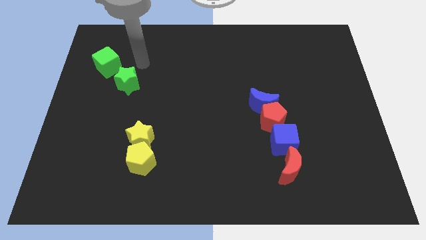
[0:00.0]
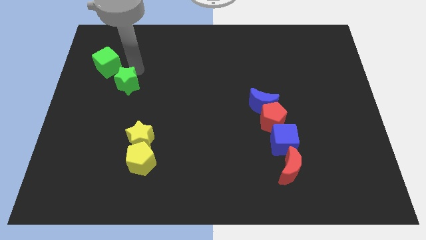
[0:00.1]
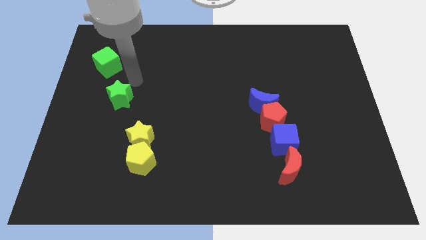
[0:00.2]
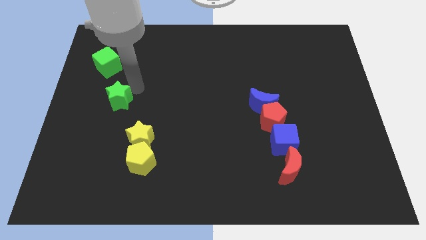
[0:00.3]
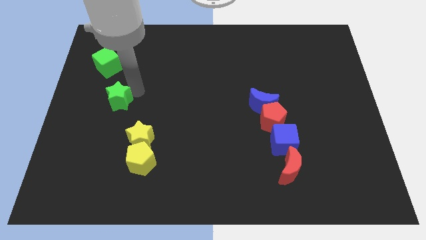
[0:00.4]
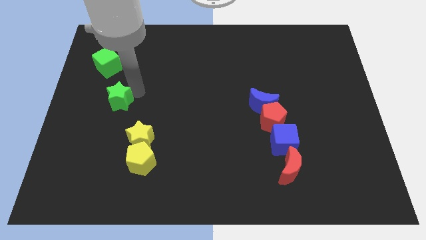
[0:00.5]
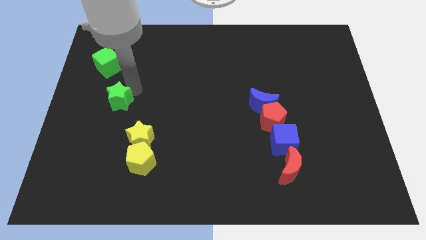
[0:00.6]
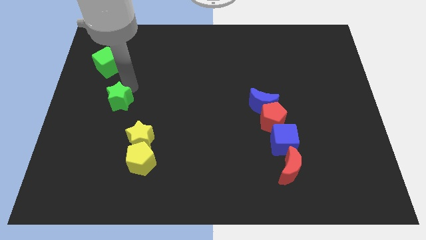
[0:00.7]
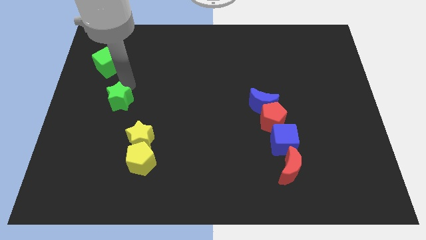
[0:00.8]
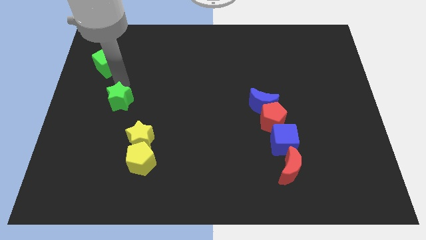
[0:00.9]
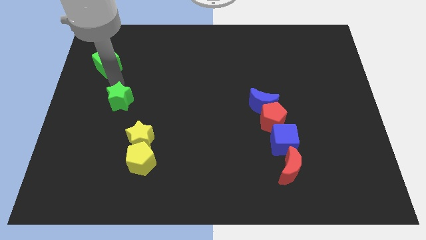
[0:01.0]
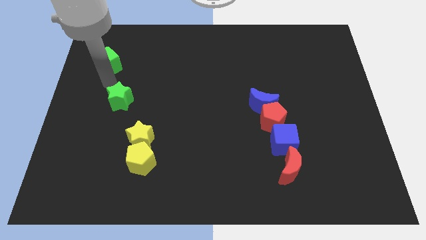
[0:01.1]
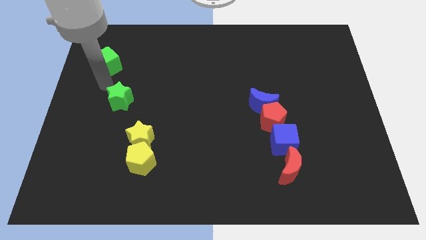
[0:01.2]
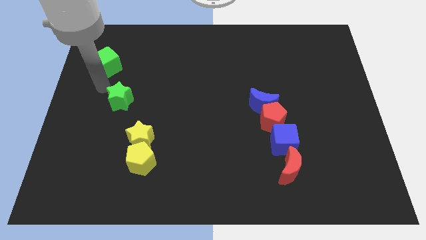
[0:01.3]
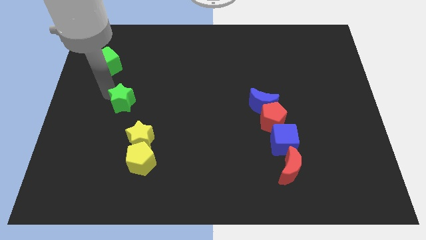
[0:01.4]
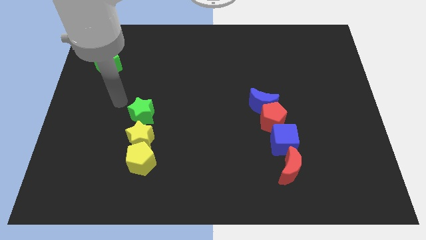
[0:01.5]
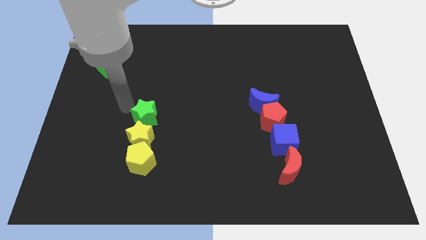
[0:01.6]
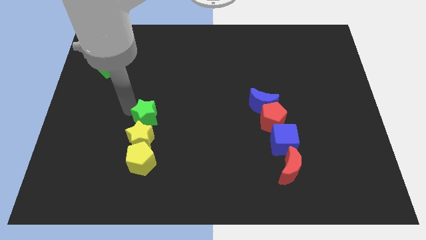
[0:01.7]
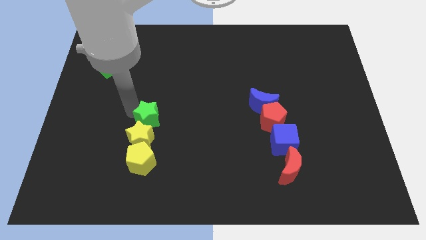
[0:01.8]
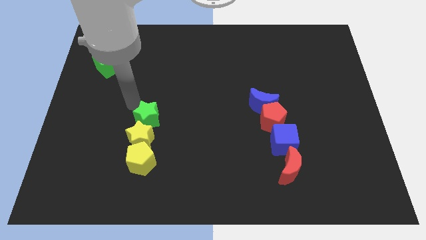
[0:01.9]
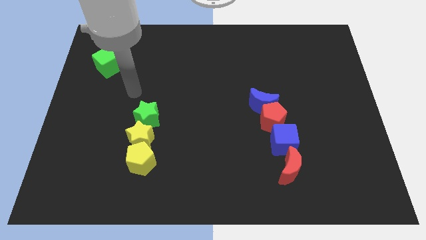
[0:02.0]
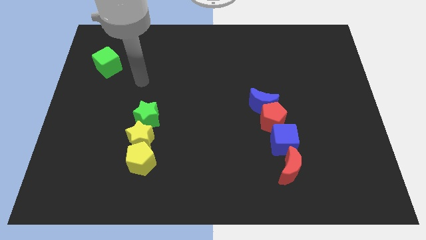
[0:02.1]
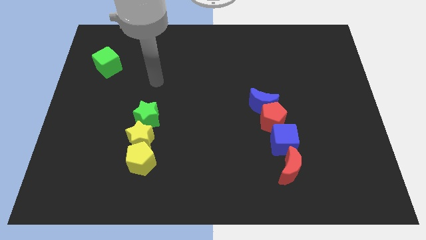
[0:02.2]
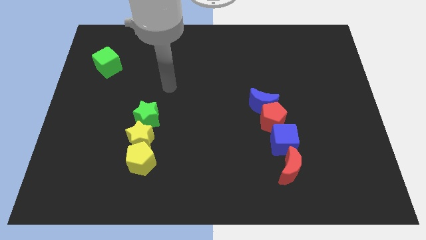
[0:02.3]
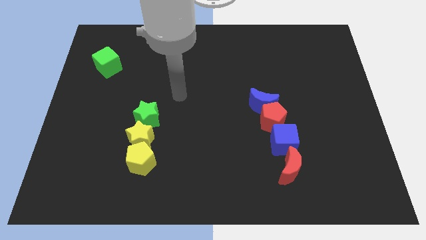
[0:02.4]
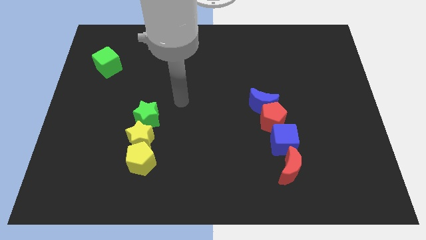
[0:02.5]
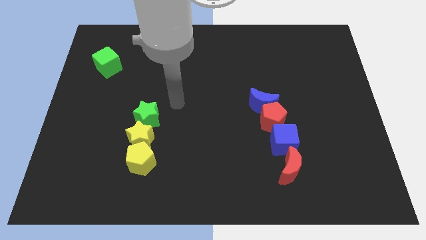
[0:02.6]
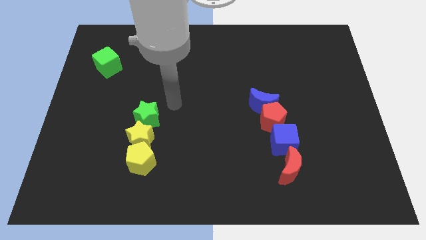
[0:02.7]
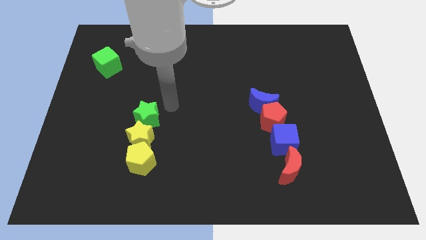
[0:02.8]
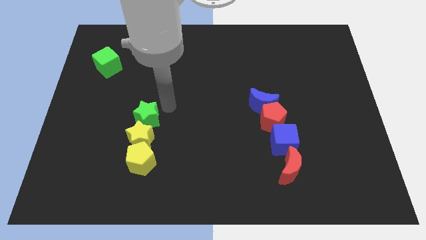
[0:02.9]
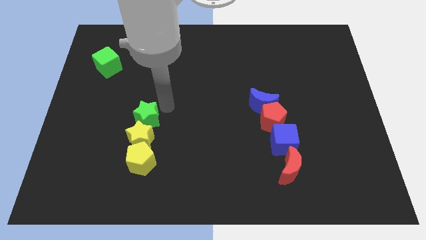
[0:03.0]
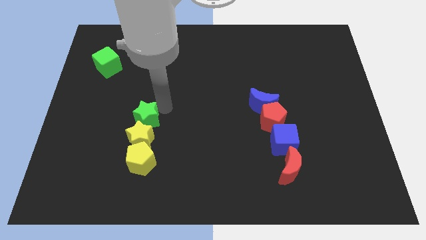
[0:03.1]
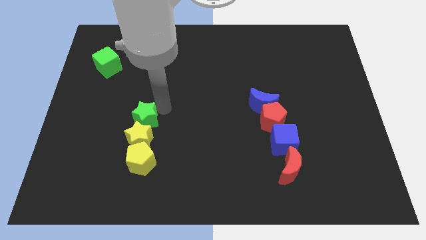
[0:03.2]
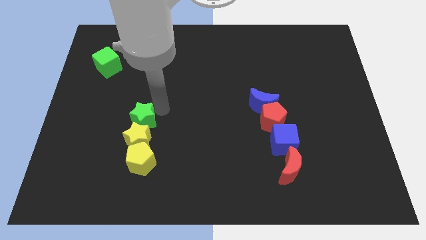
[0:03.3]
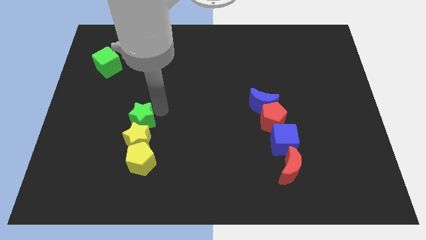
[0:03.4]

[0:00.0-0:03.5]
slide the green star into the yellow star

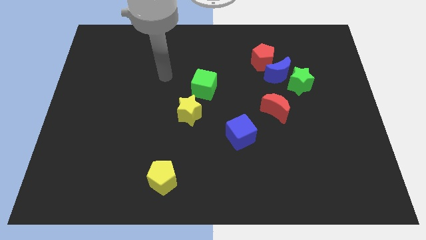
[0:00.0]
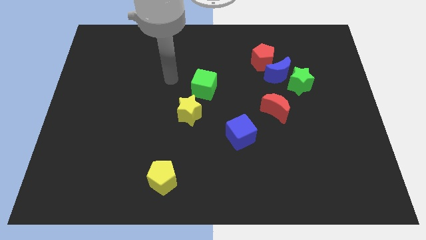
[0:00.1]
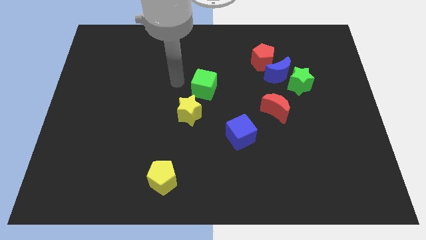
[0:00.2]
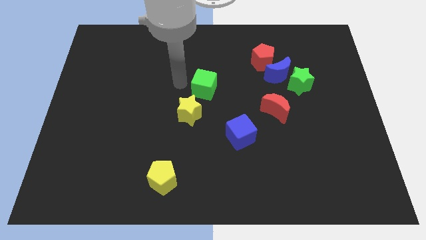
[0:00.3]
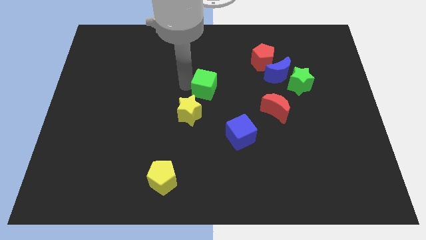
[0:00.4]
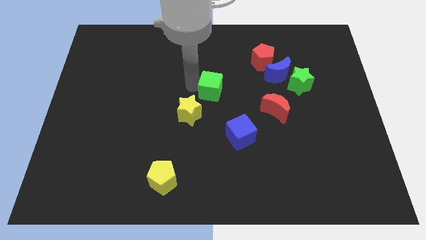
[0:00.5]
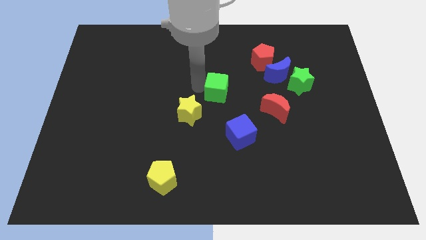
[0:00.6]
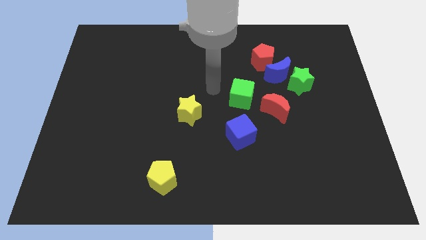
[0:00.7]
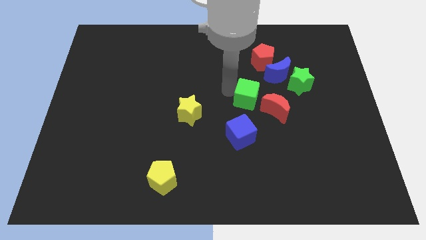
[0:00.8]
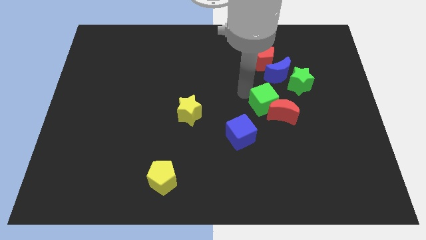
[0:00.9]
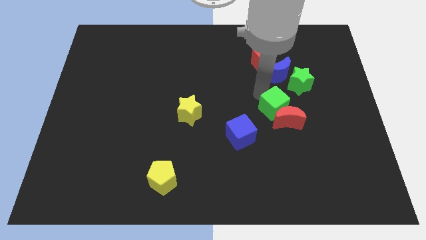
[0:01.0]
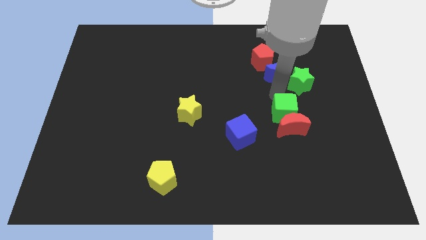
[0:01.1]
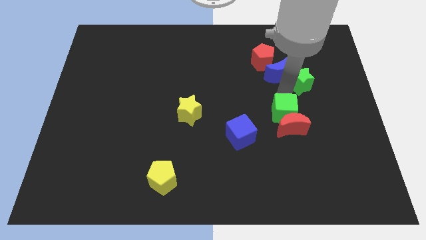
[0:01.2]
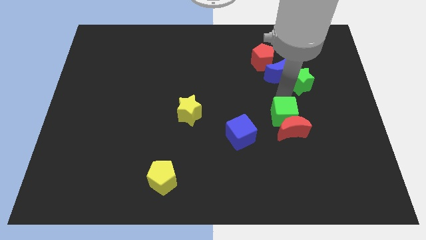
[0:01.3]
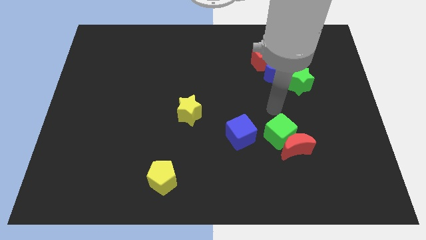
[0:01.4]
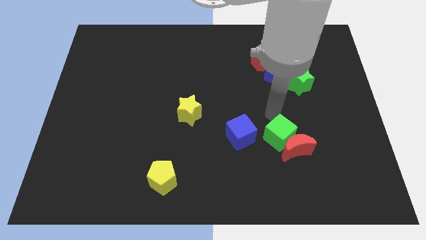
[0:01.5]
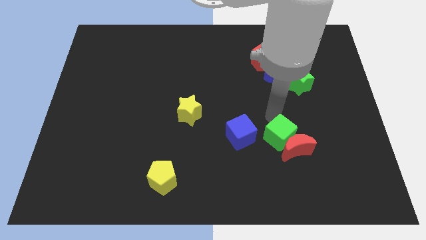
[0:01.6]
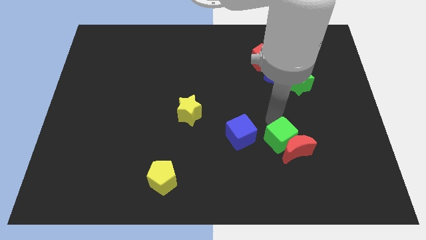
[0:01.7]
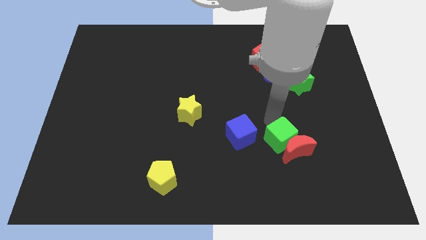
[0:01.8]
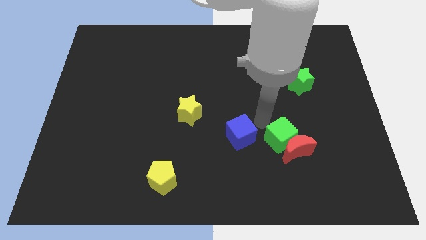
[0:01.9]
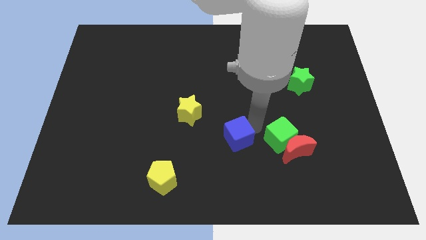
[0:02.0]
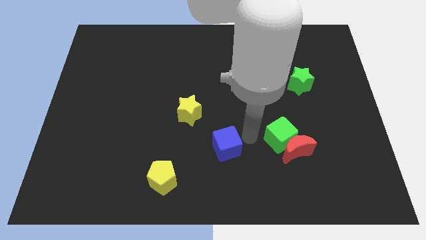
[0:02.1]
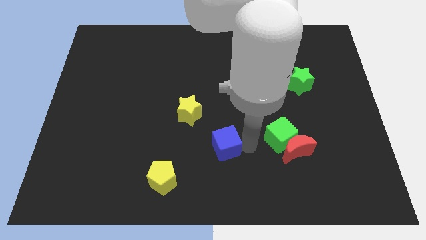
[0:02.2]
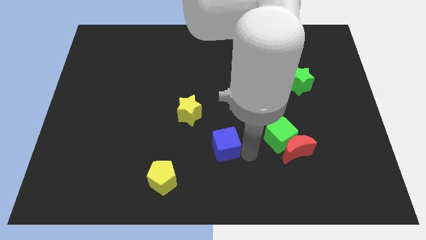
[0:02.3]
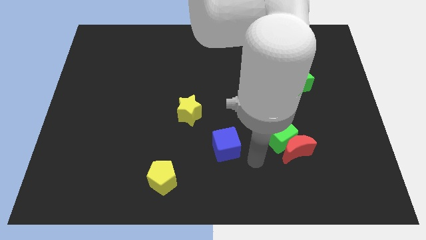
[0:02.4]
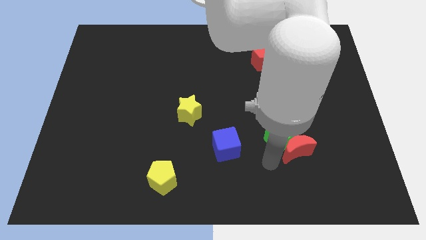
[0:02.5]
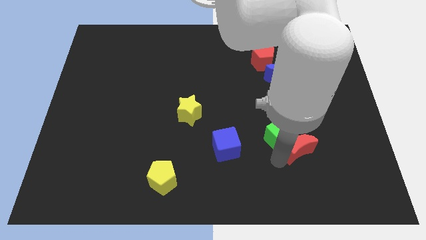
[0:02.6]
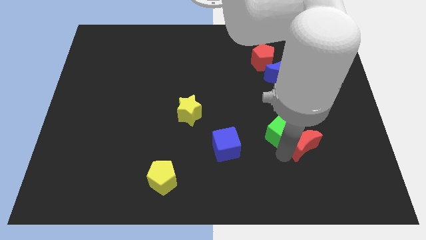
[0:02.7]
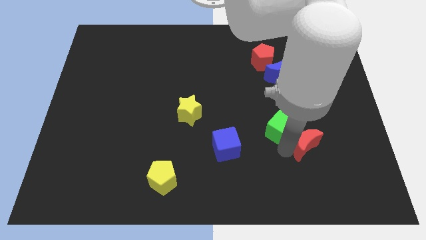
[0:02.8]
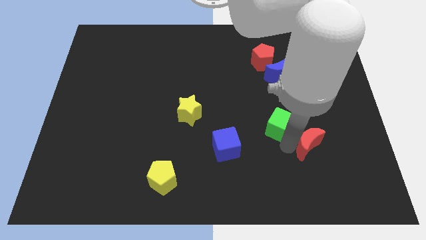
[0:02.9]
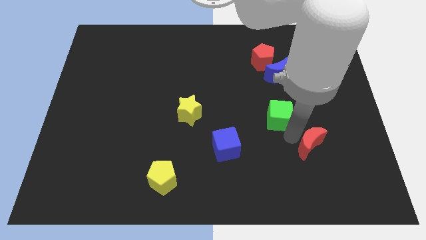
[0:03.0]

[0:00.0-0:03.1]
push the green and blue cubes and red moon towards the bottom side of the board

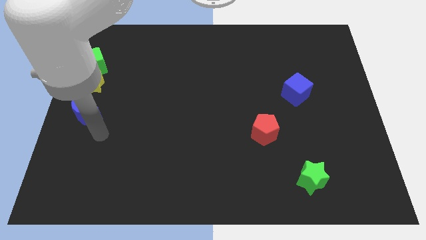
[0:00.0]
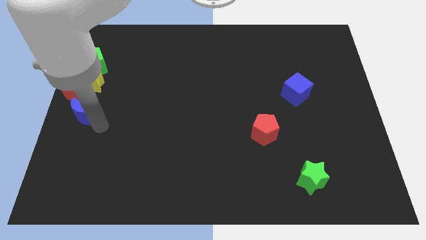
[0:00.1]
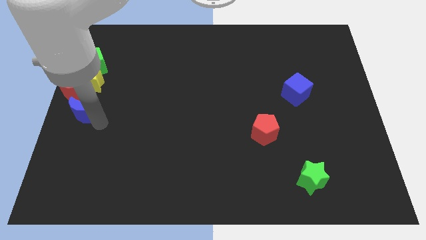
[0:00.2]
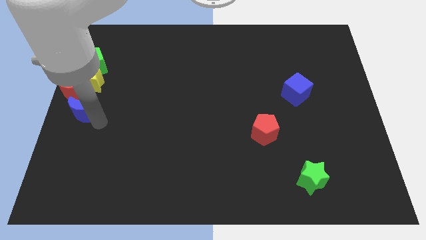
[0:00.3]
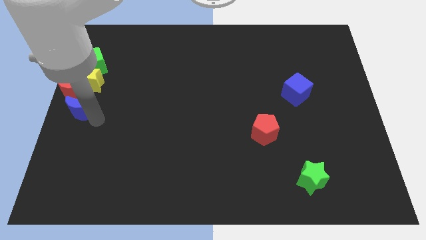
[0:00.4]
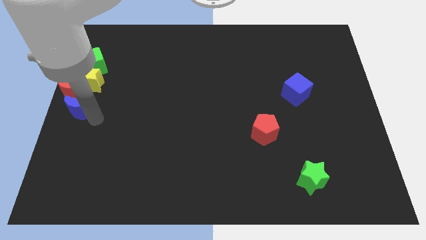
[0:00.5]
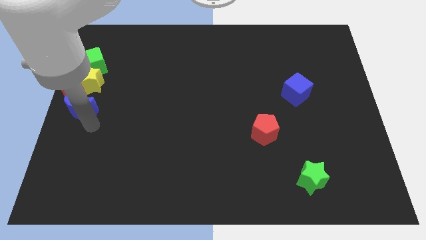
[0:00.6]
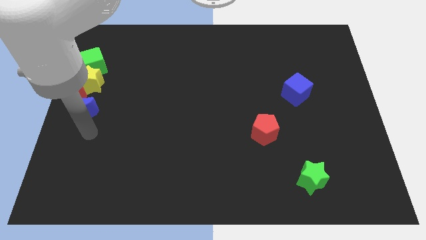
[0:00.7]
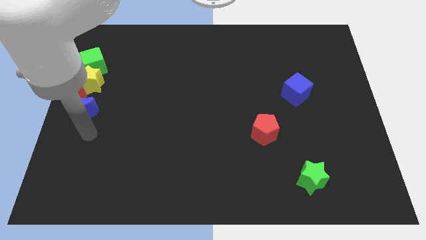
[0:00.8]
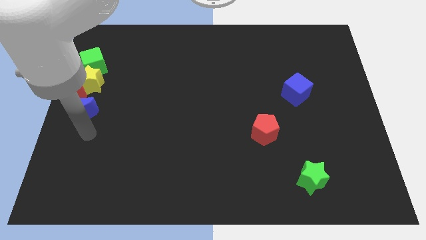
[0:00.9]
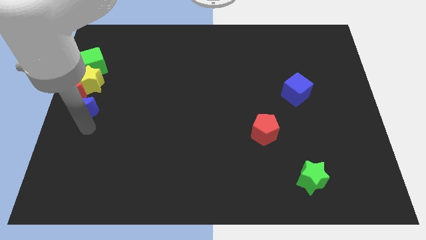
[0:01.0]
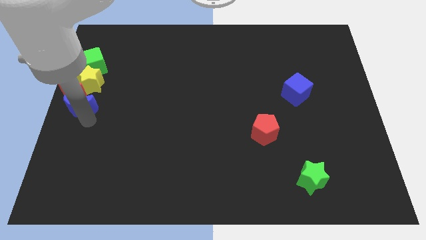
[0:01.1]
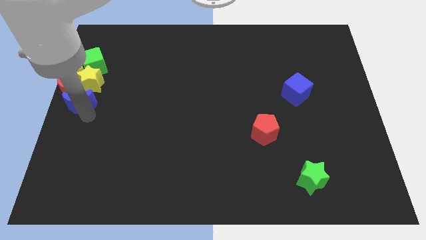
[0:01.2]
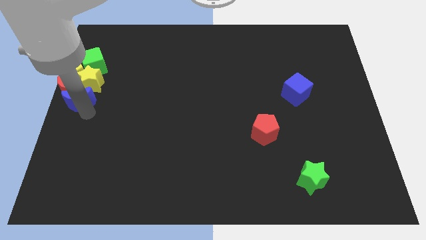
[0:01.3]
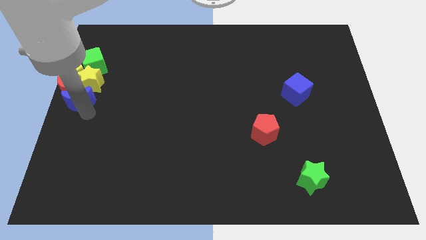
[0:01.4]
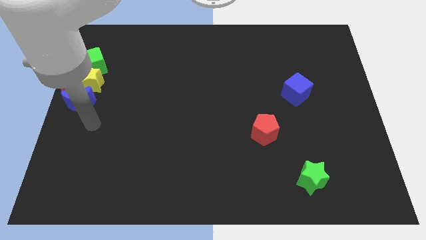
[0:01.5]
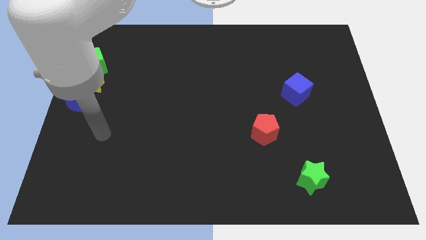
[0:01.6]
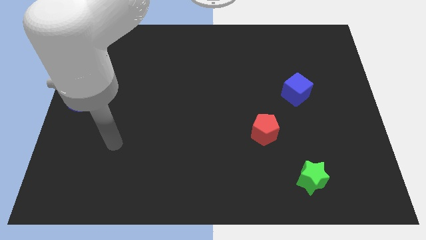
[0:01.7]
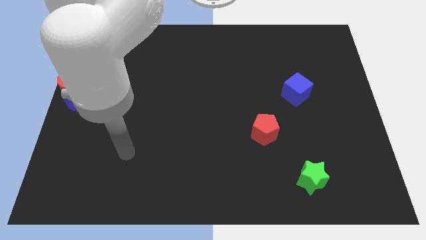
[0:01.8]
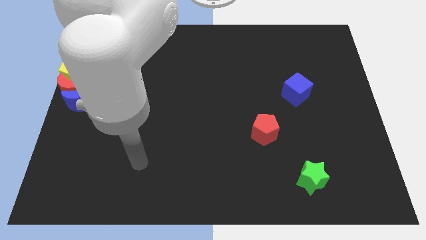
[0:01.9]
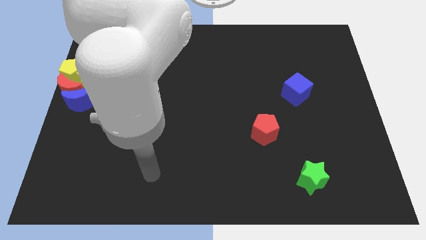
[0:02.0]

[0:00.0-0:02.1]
move the blue moon close to the group of blocks

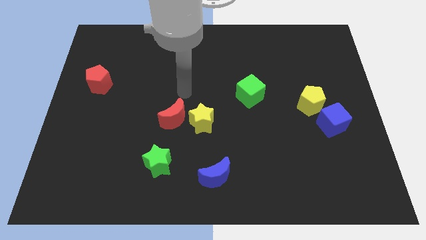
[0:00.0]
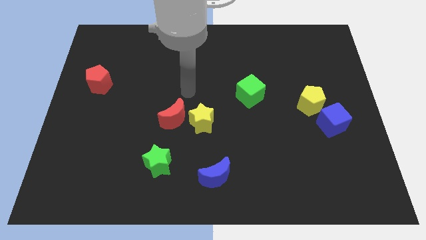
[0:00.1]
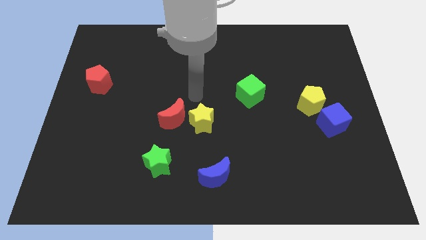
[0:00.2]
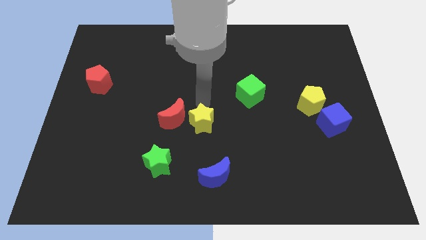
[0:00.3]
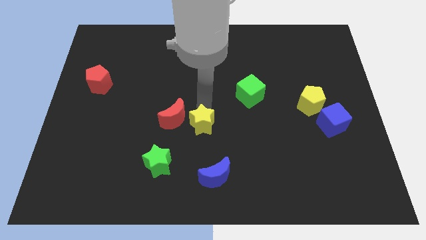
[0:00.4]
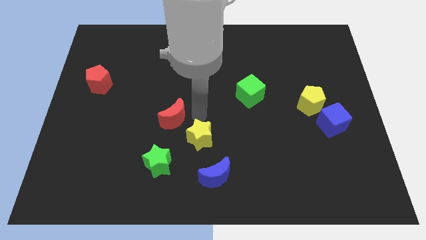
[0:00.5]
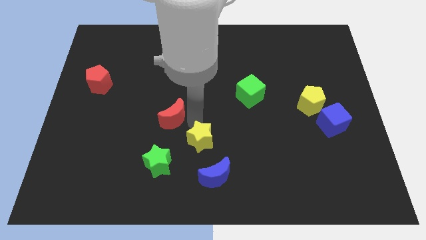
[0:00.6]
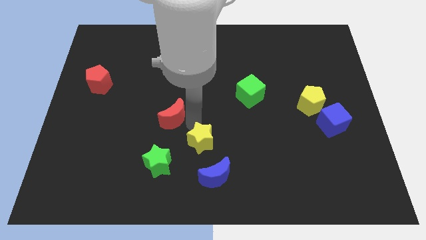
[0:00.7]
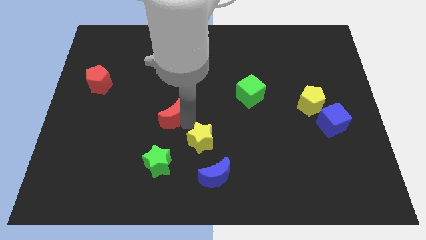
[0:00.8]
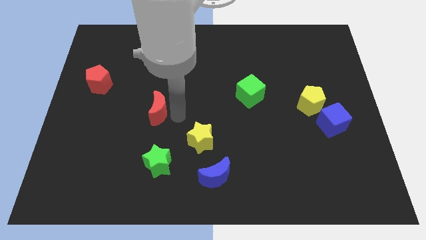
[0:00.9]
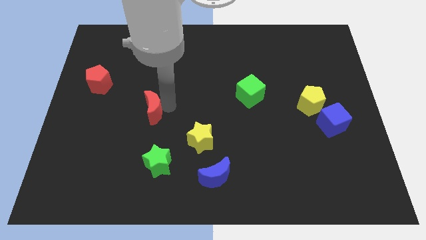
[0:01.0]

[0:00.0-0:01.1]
move the yellow star to the down
